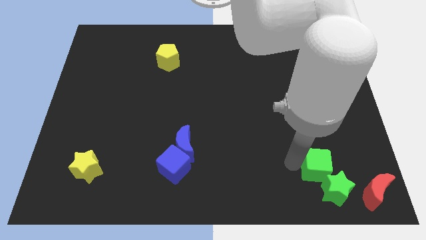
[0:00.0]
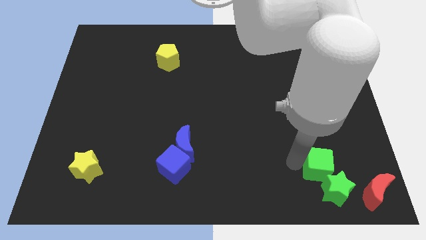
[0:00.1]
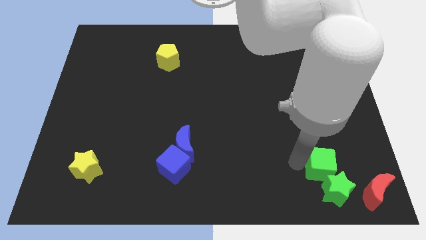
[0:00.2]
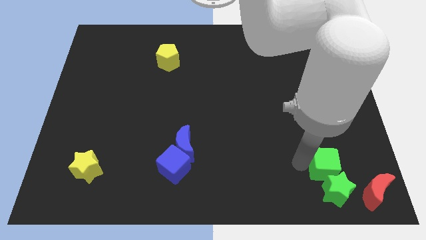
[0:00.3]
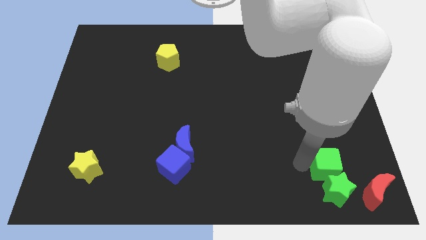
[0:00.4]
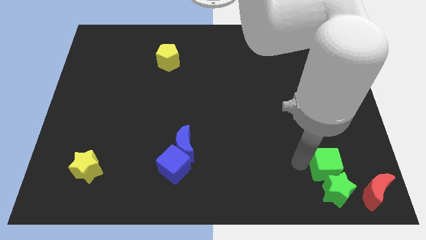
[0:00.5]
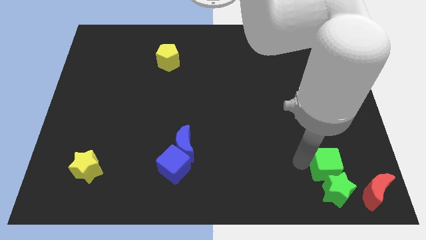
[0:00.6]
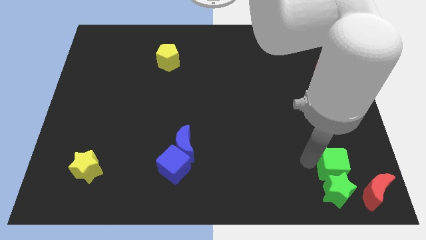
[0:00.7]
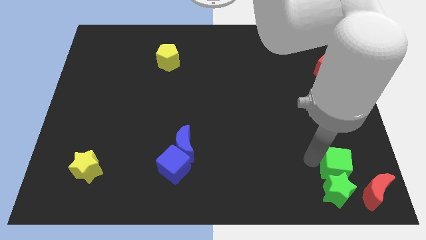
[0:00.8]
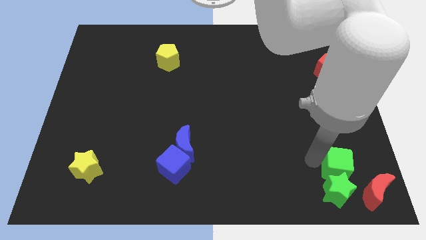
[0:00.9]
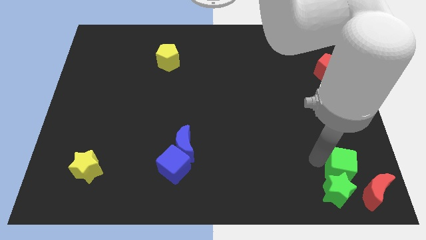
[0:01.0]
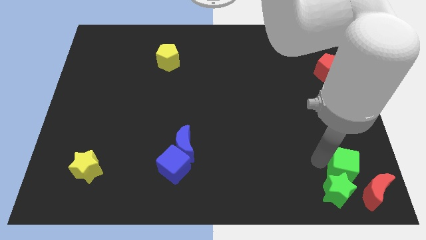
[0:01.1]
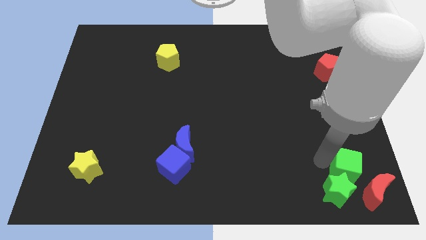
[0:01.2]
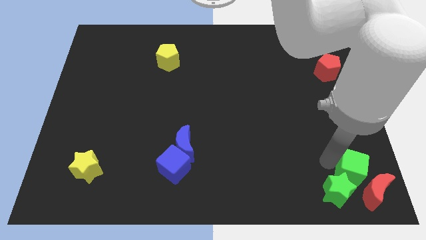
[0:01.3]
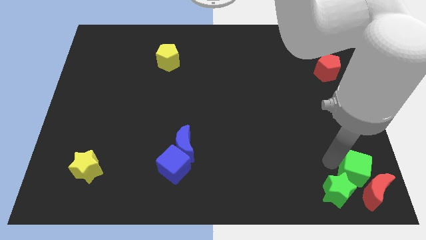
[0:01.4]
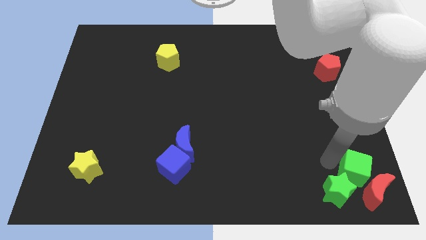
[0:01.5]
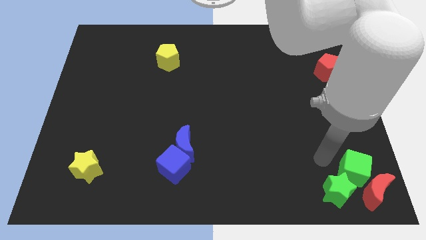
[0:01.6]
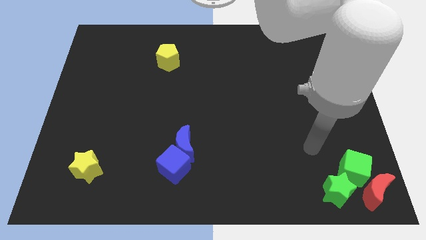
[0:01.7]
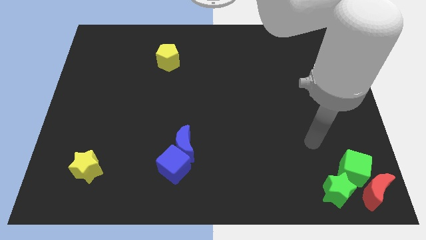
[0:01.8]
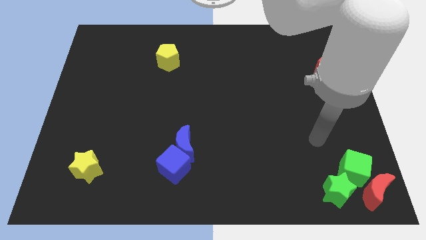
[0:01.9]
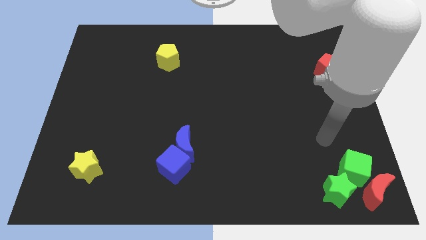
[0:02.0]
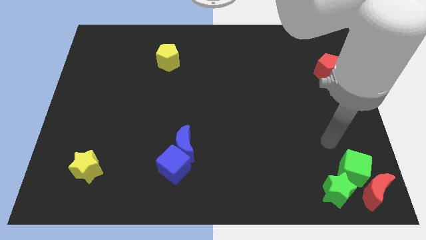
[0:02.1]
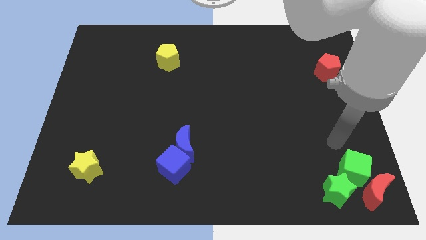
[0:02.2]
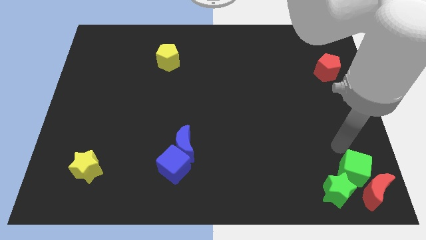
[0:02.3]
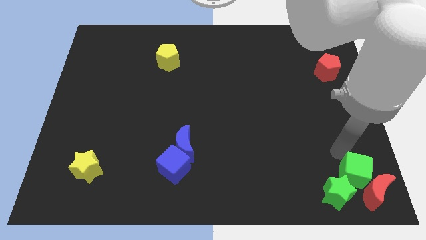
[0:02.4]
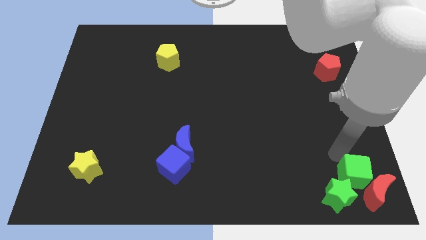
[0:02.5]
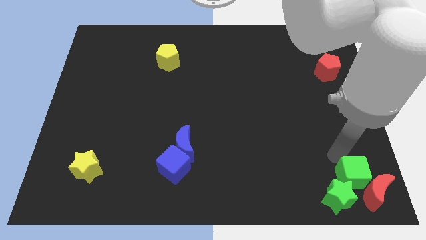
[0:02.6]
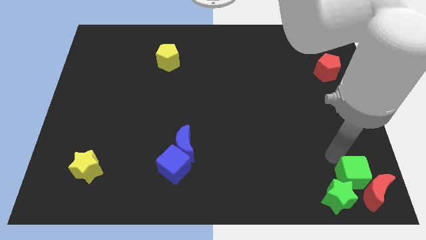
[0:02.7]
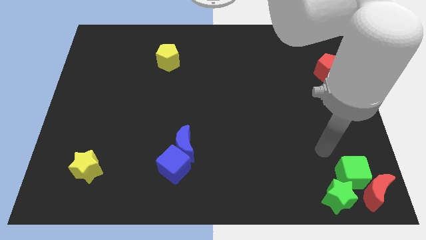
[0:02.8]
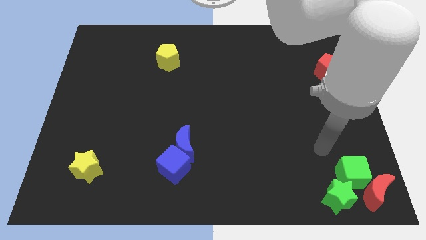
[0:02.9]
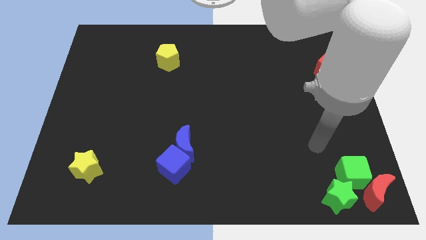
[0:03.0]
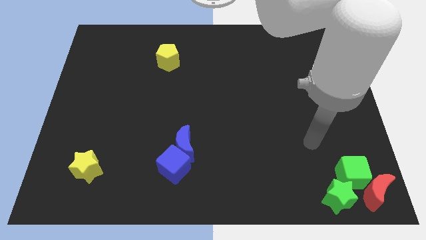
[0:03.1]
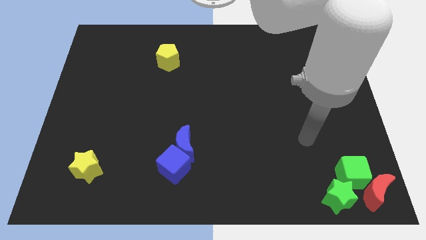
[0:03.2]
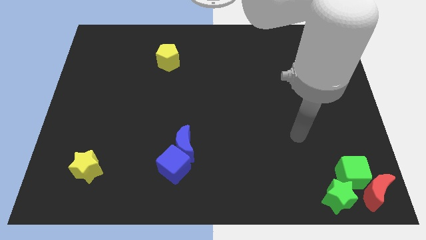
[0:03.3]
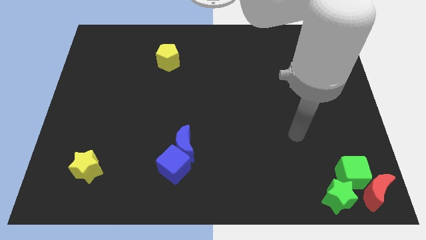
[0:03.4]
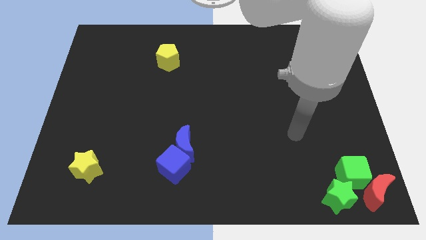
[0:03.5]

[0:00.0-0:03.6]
push the green cube into the green star and red crescent

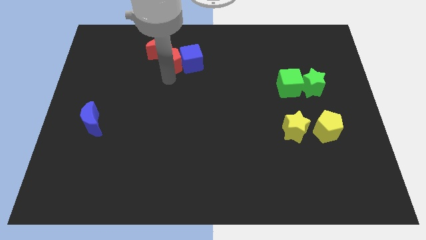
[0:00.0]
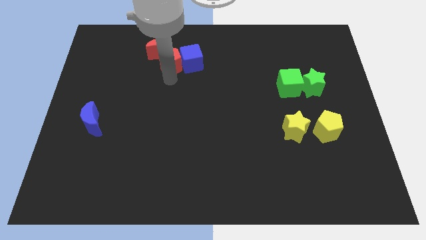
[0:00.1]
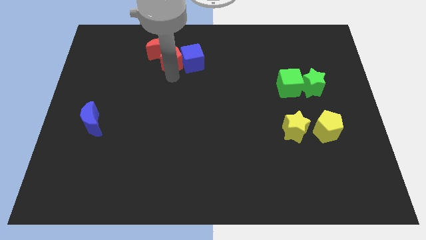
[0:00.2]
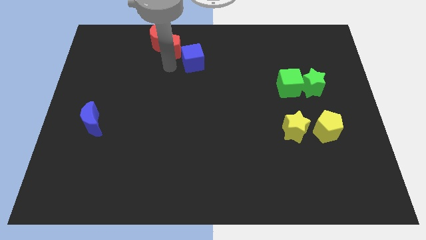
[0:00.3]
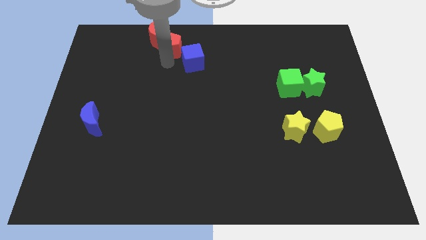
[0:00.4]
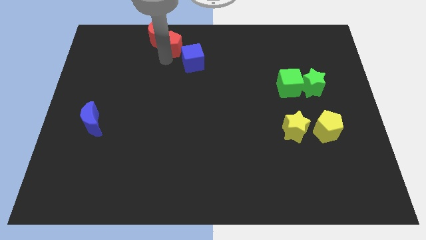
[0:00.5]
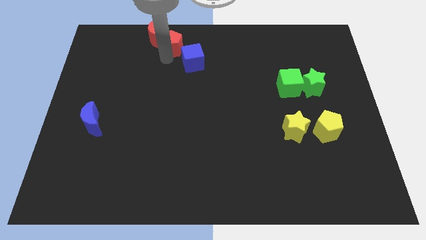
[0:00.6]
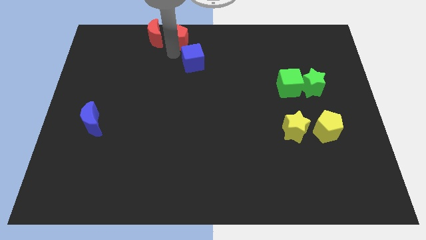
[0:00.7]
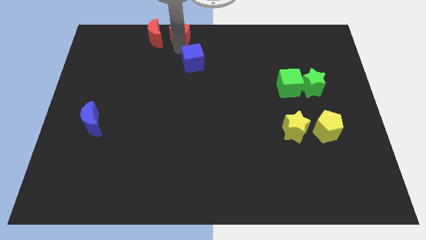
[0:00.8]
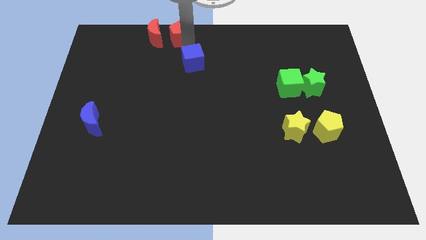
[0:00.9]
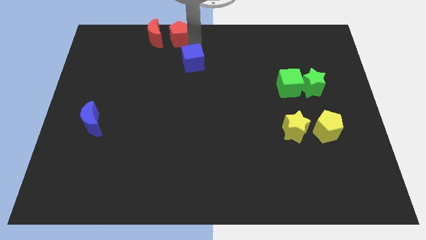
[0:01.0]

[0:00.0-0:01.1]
move the red pentagon to the right side of the red moon

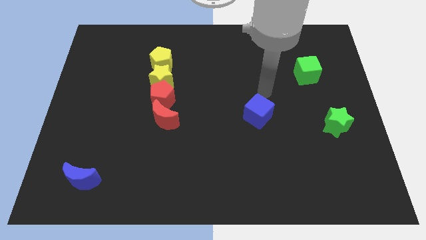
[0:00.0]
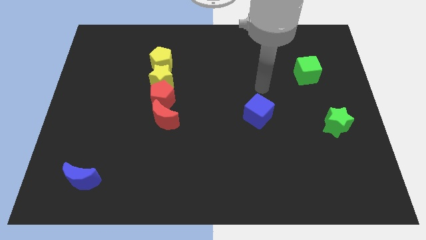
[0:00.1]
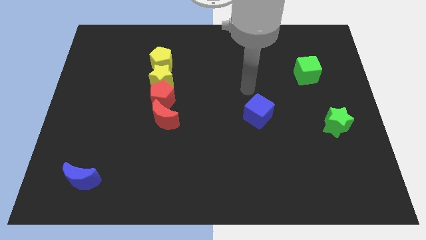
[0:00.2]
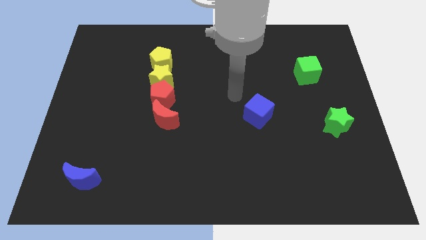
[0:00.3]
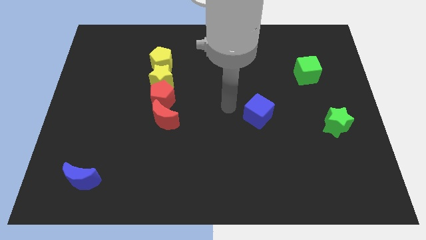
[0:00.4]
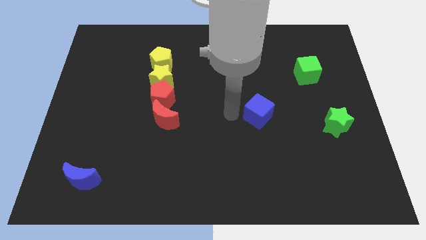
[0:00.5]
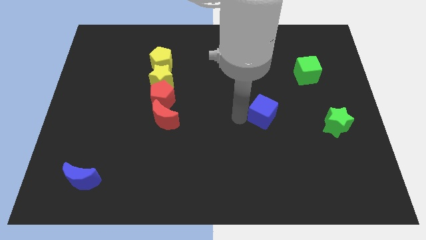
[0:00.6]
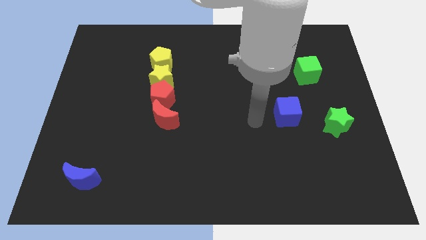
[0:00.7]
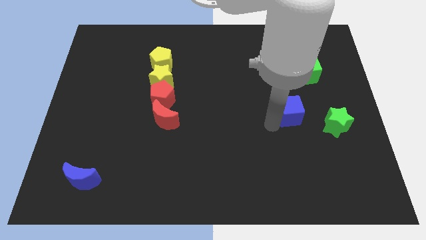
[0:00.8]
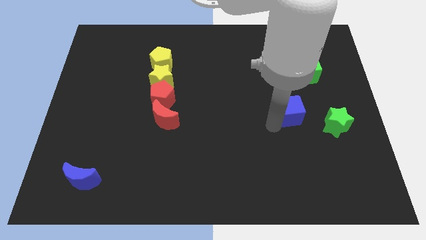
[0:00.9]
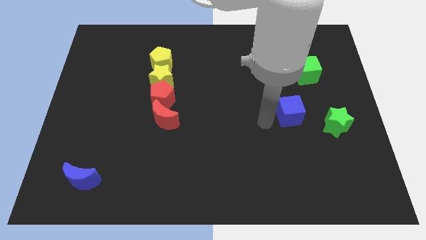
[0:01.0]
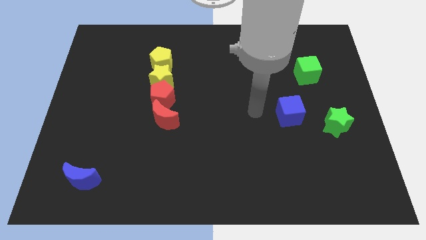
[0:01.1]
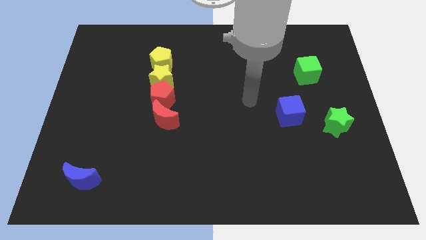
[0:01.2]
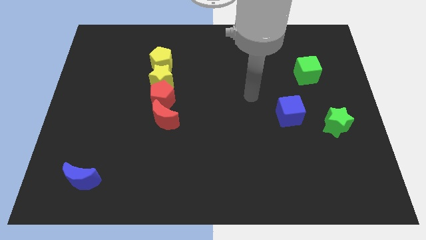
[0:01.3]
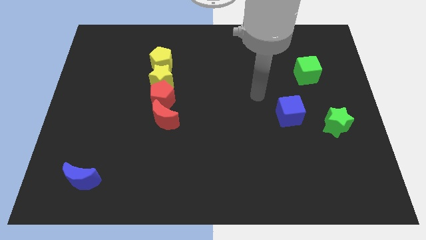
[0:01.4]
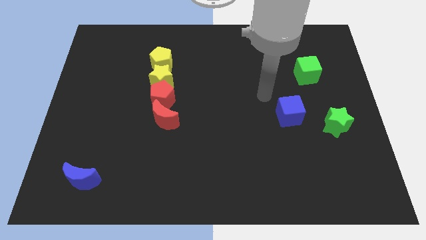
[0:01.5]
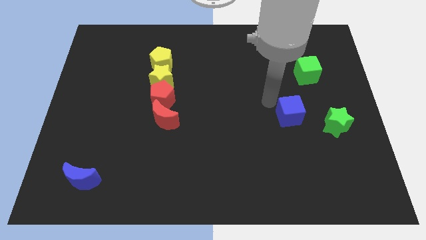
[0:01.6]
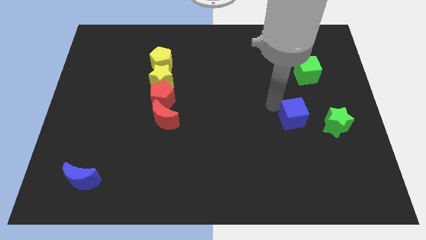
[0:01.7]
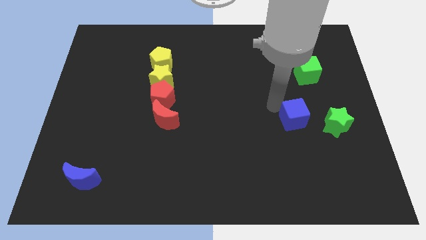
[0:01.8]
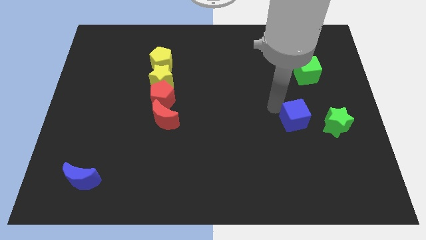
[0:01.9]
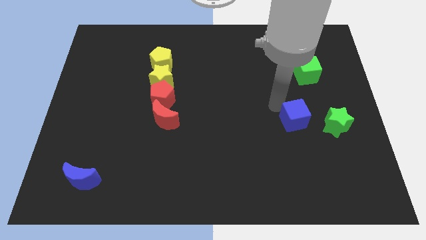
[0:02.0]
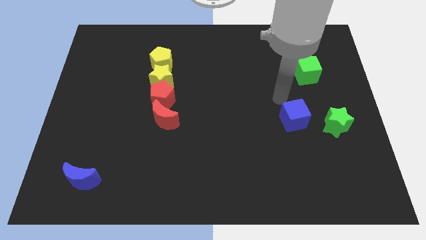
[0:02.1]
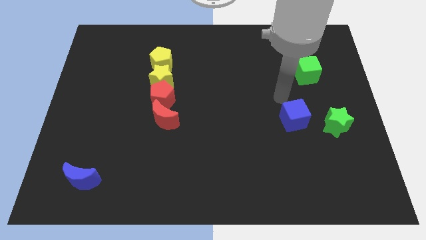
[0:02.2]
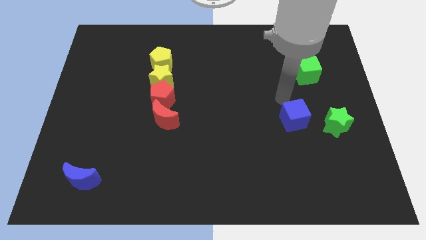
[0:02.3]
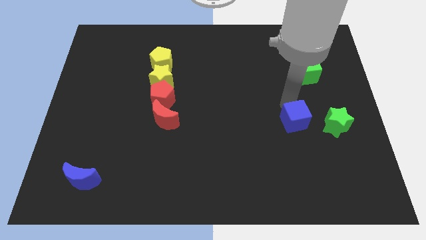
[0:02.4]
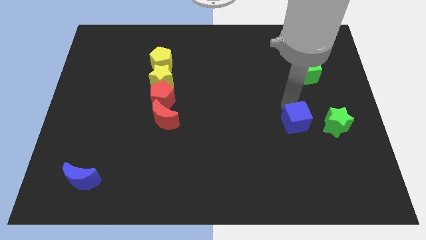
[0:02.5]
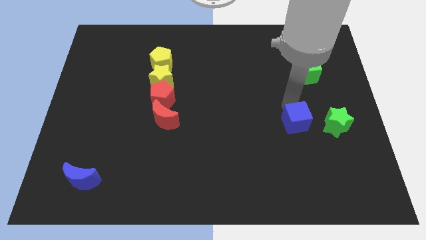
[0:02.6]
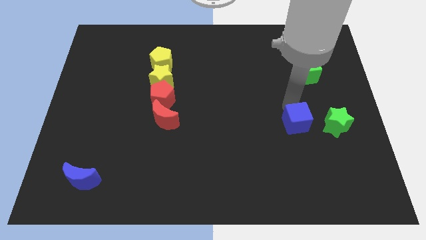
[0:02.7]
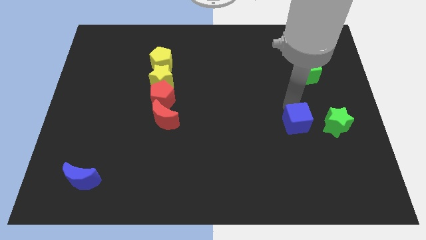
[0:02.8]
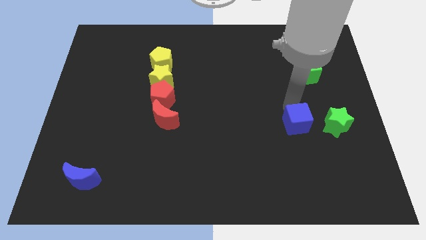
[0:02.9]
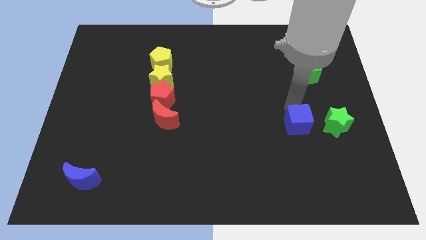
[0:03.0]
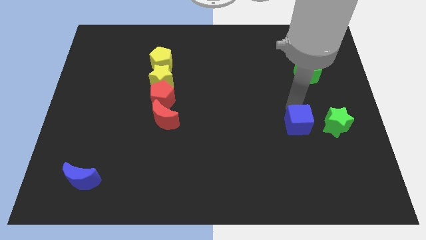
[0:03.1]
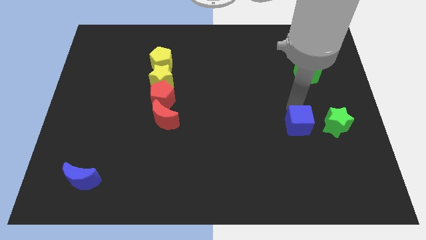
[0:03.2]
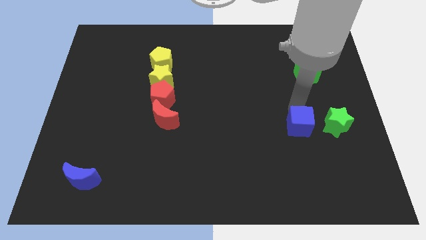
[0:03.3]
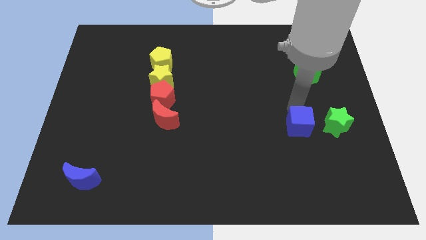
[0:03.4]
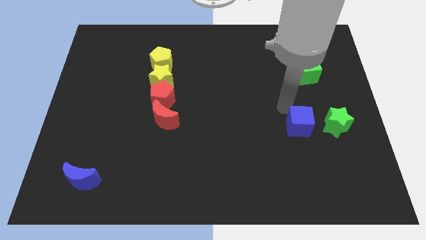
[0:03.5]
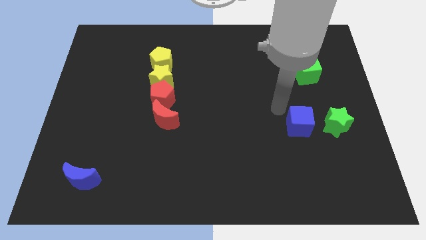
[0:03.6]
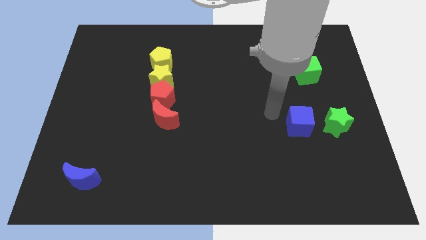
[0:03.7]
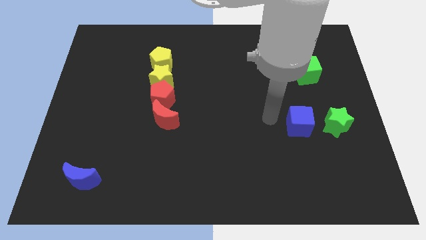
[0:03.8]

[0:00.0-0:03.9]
slide the blue cube to the left side of the green star

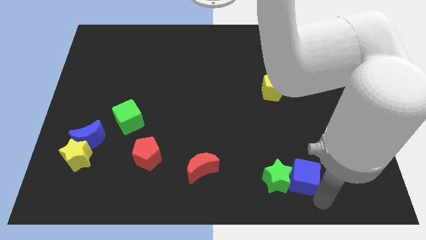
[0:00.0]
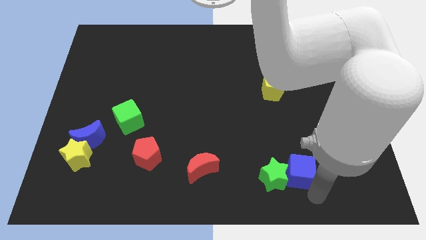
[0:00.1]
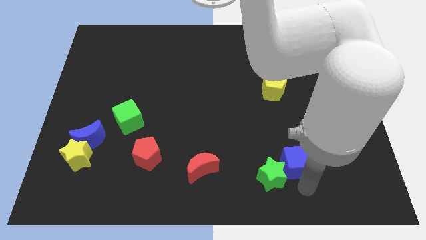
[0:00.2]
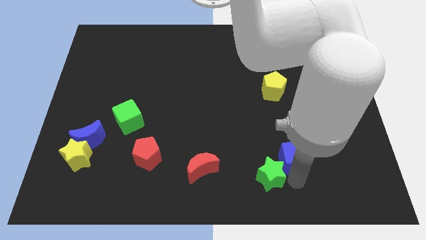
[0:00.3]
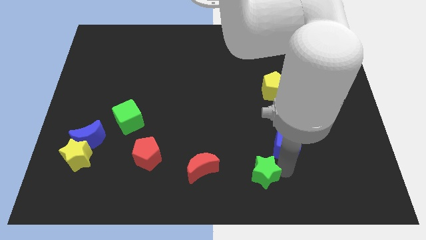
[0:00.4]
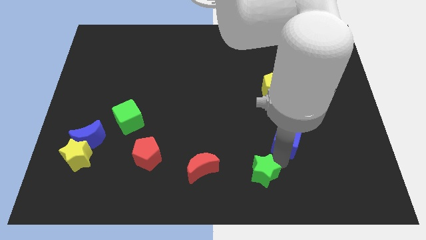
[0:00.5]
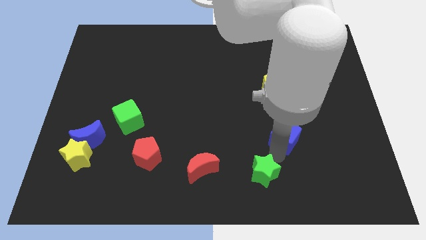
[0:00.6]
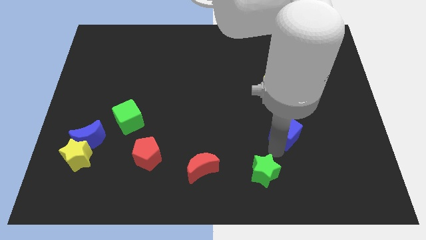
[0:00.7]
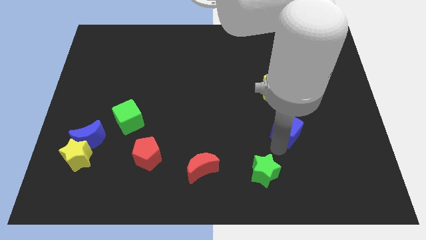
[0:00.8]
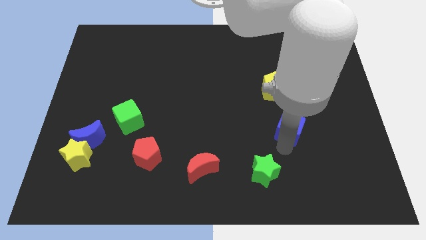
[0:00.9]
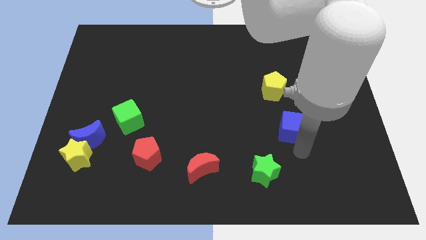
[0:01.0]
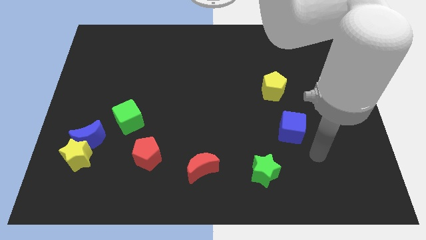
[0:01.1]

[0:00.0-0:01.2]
separate blue cube from green star
